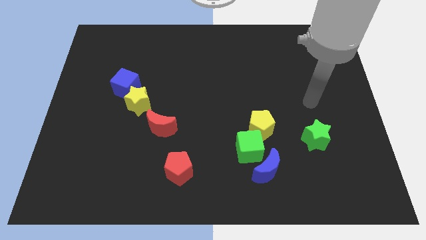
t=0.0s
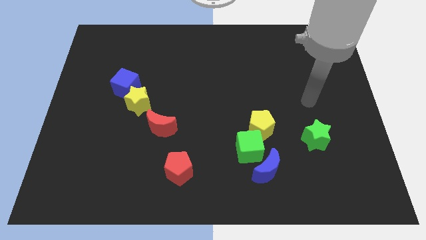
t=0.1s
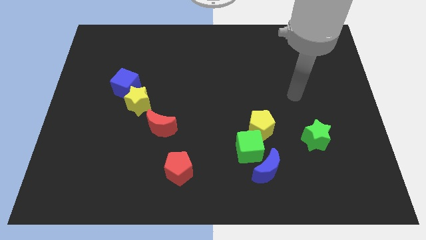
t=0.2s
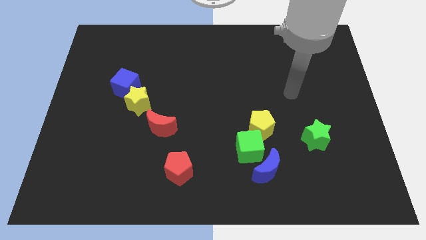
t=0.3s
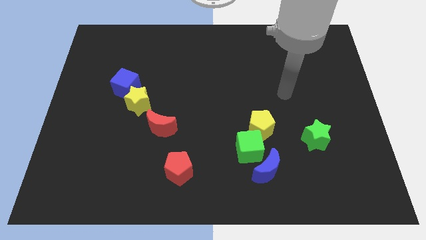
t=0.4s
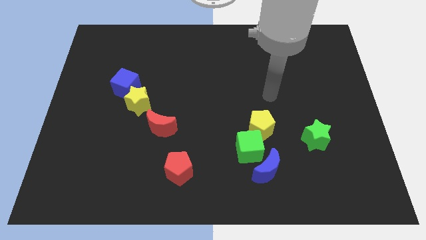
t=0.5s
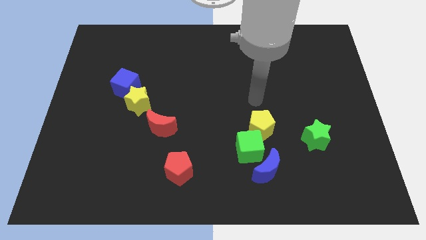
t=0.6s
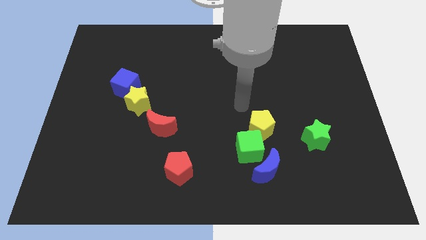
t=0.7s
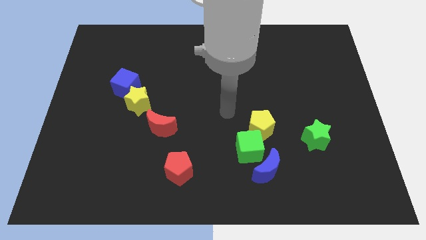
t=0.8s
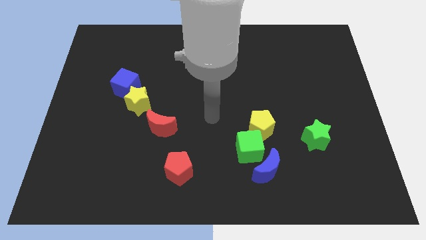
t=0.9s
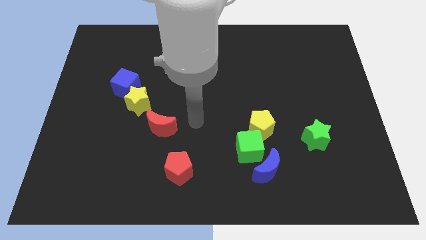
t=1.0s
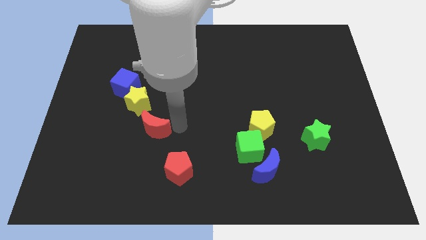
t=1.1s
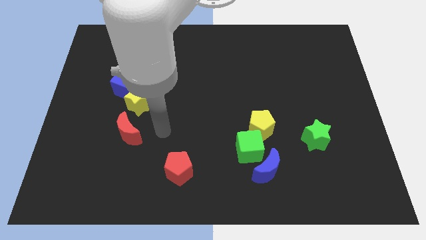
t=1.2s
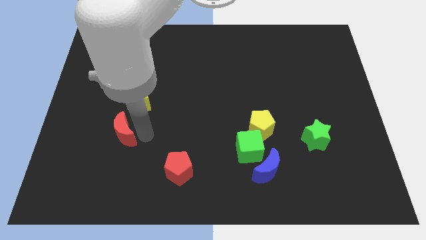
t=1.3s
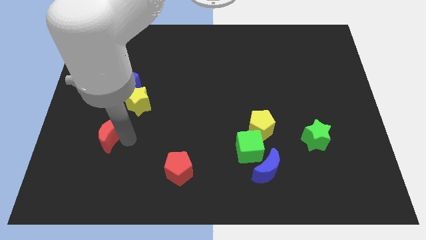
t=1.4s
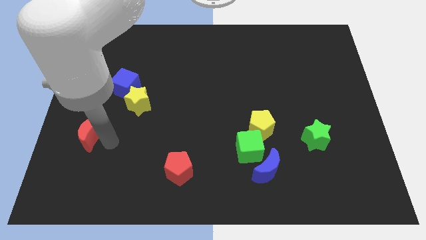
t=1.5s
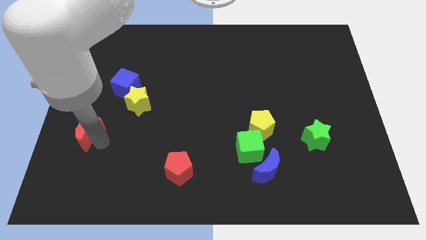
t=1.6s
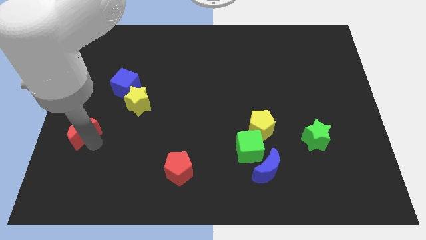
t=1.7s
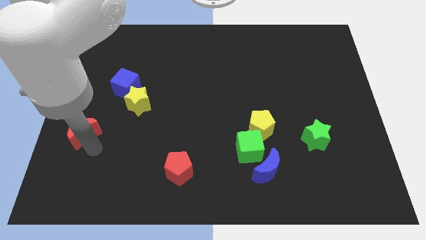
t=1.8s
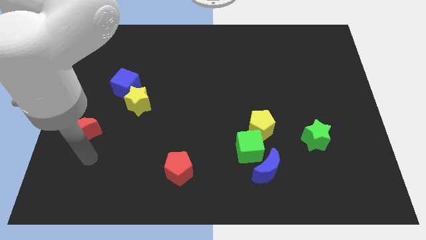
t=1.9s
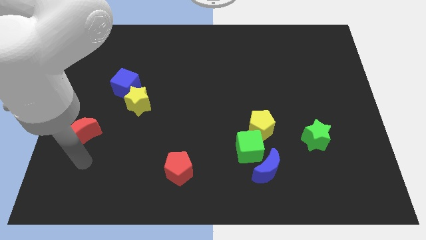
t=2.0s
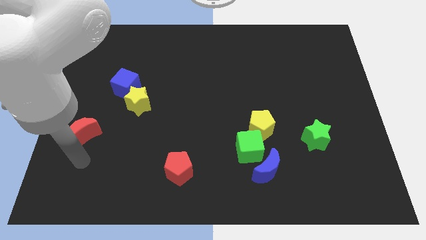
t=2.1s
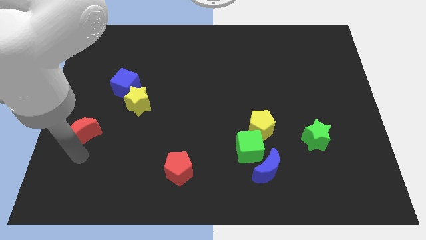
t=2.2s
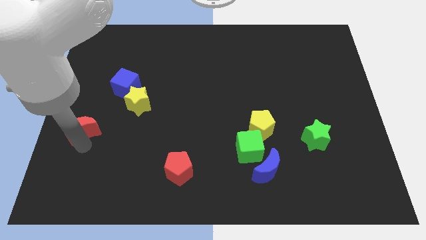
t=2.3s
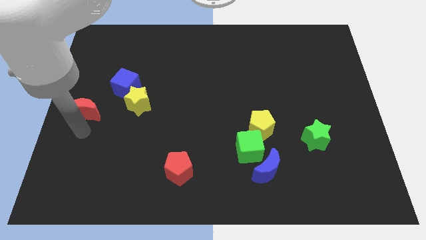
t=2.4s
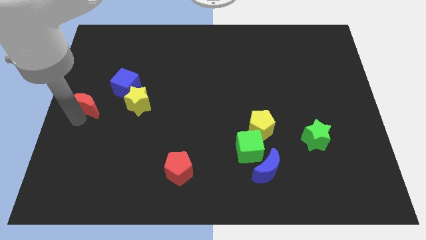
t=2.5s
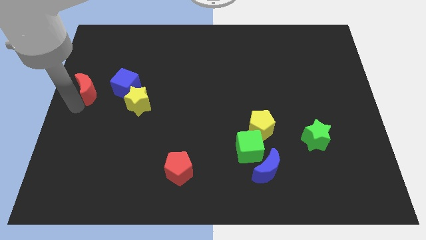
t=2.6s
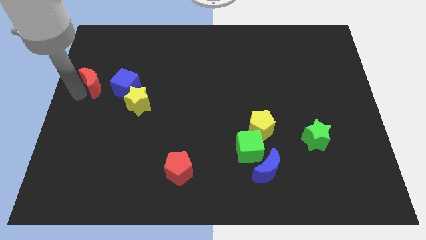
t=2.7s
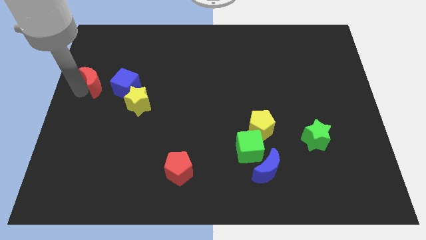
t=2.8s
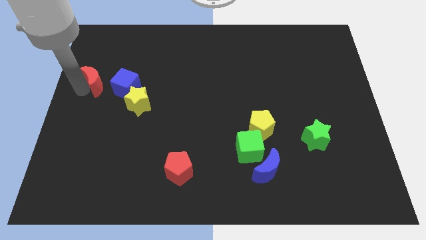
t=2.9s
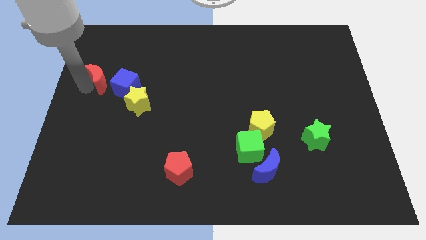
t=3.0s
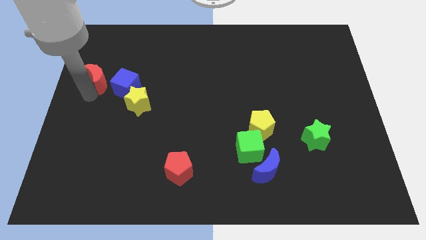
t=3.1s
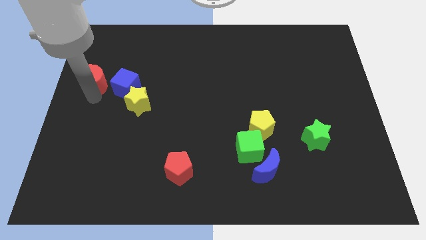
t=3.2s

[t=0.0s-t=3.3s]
push the red moon to the left side of the blue cube

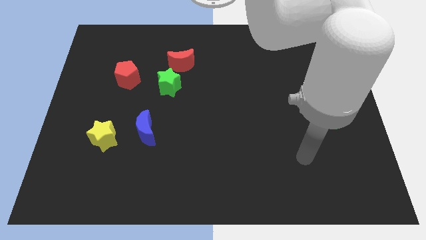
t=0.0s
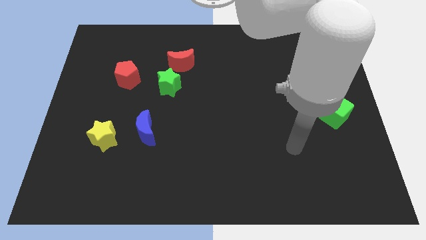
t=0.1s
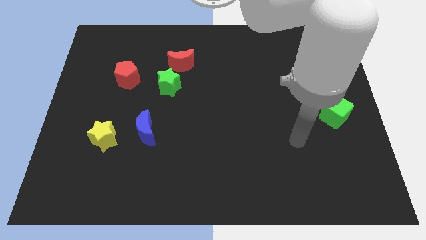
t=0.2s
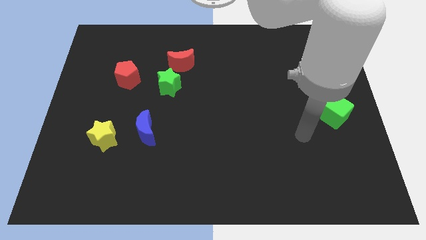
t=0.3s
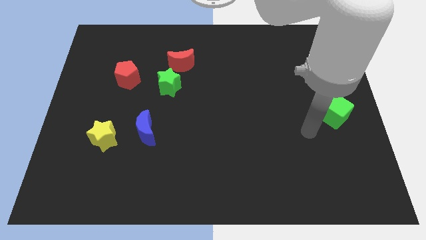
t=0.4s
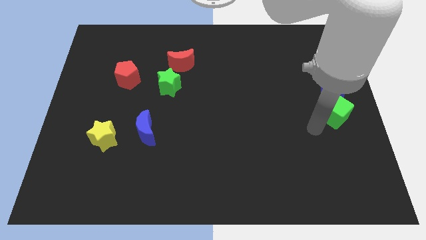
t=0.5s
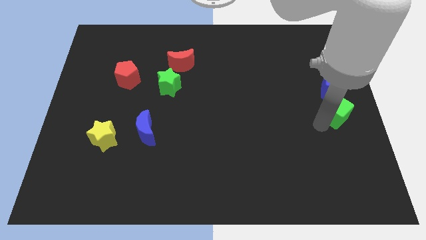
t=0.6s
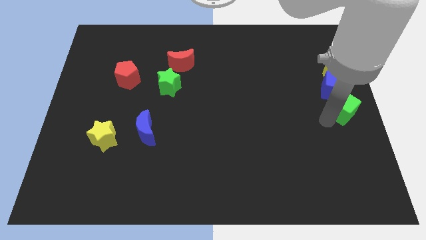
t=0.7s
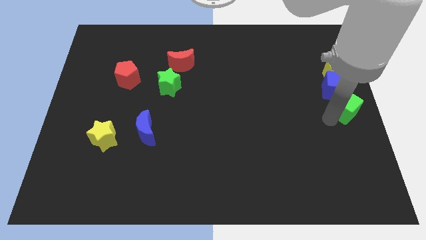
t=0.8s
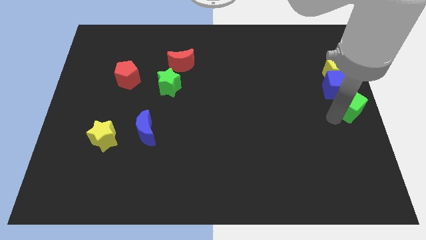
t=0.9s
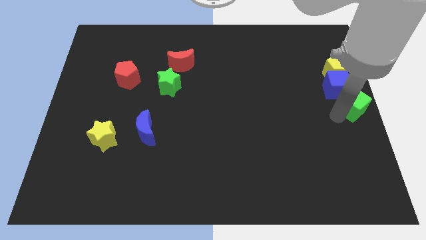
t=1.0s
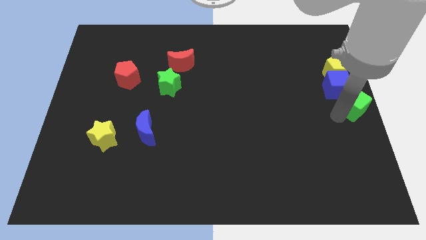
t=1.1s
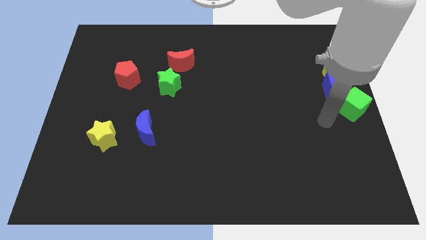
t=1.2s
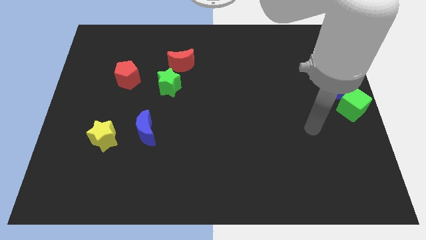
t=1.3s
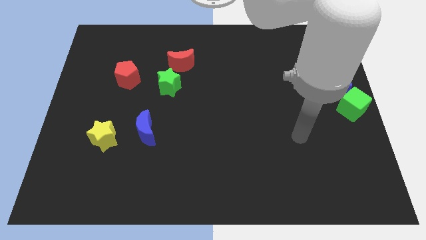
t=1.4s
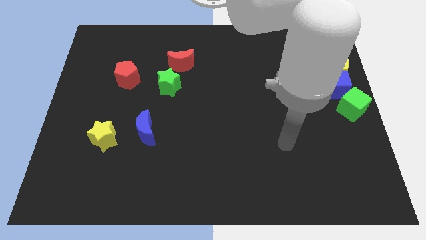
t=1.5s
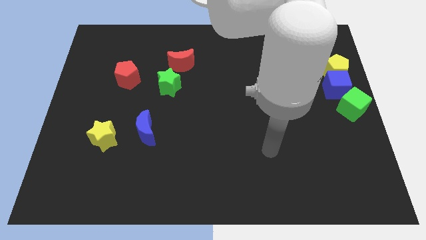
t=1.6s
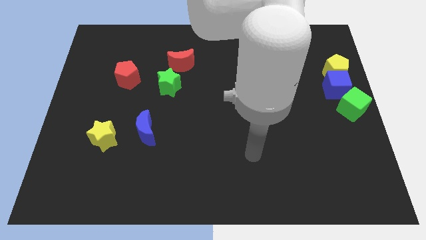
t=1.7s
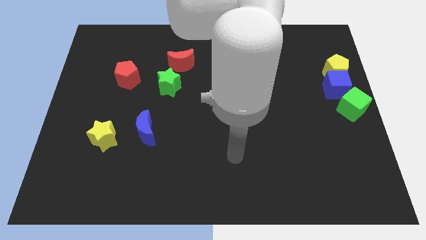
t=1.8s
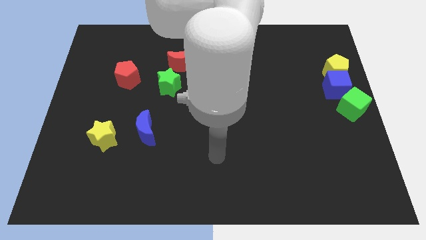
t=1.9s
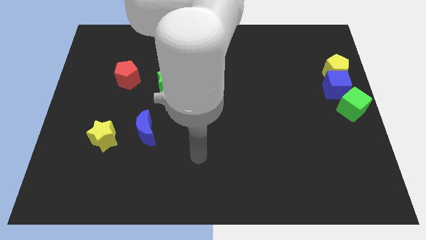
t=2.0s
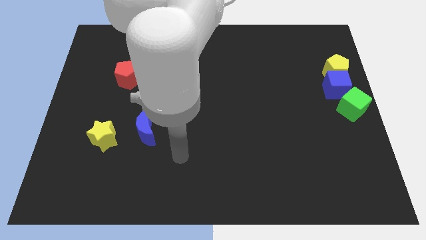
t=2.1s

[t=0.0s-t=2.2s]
move green cube to the center right

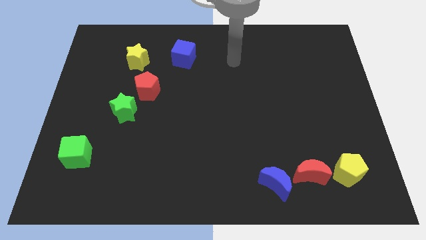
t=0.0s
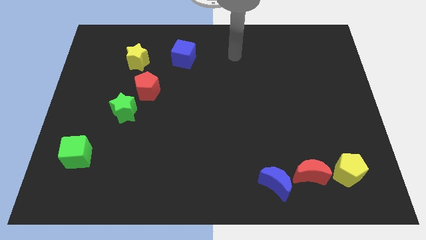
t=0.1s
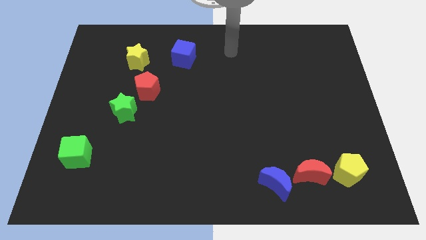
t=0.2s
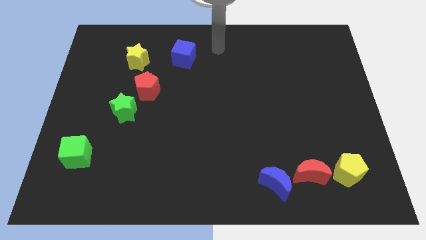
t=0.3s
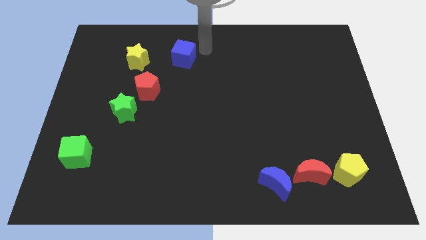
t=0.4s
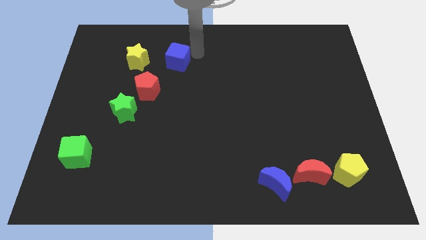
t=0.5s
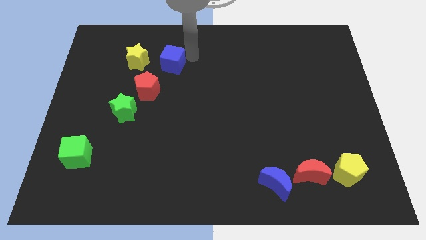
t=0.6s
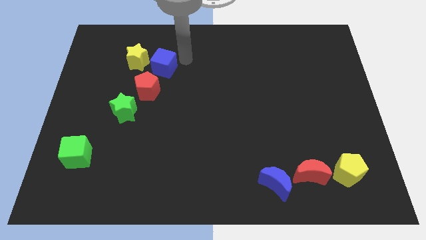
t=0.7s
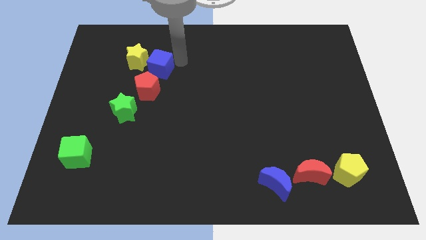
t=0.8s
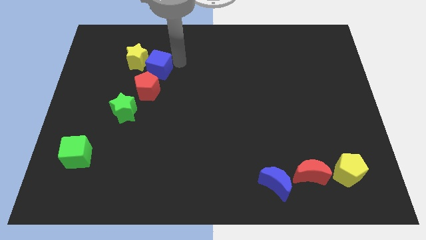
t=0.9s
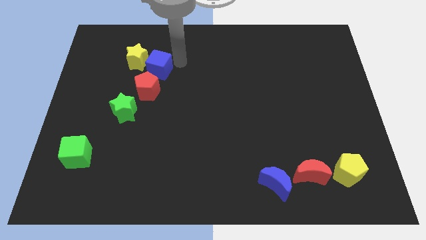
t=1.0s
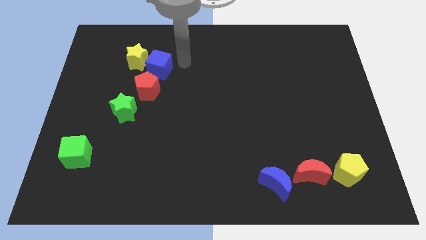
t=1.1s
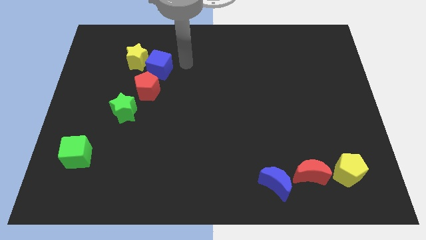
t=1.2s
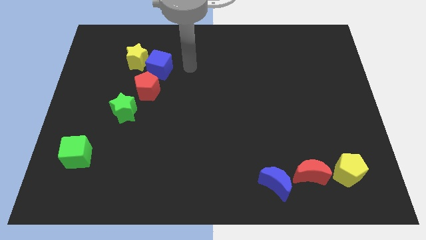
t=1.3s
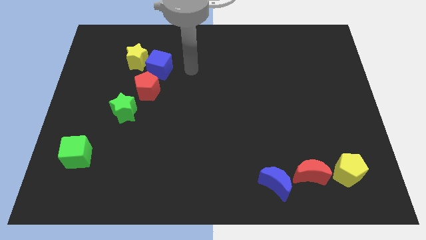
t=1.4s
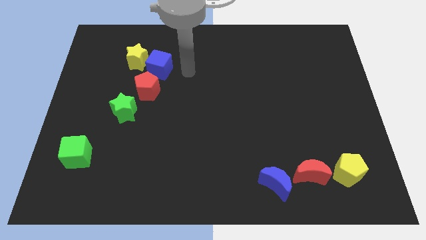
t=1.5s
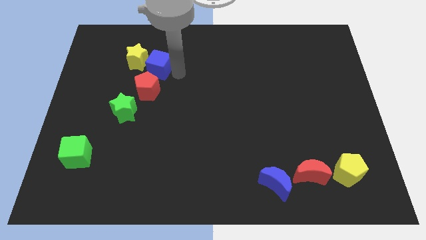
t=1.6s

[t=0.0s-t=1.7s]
push blue cube towards the red pentagon

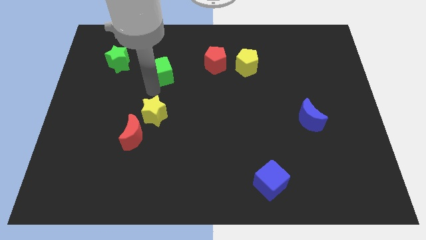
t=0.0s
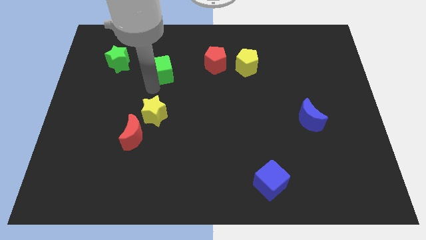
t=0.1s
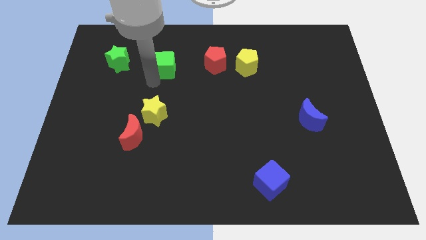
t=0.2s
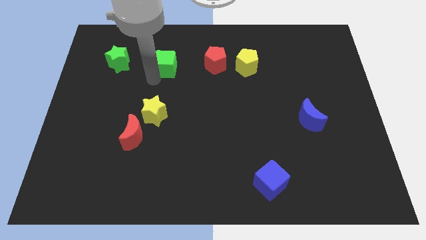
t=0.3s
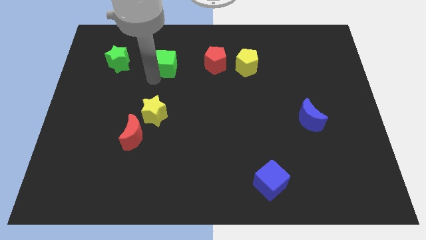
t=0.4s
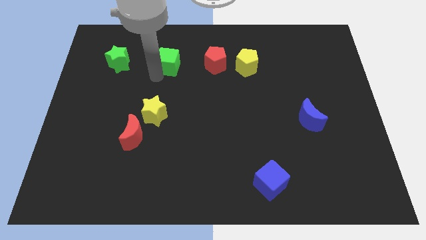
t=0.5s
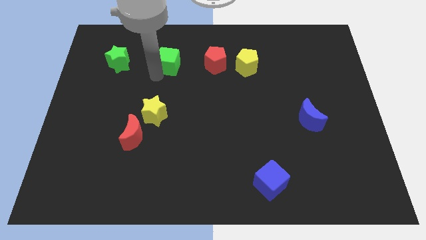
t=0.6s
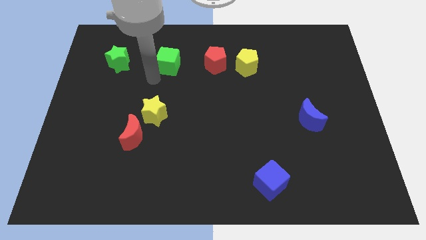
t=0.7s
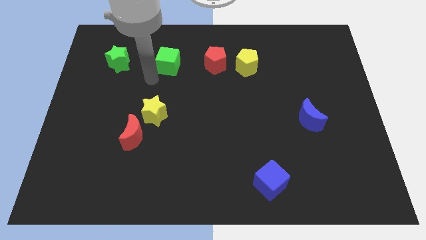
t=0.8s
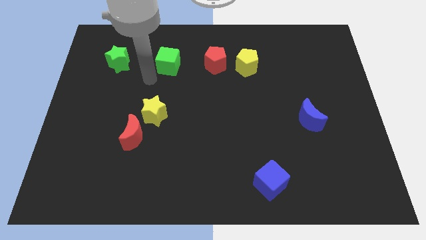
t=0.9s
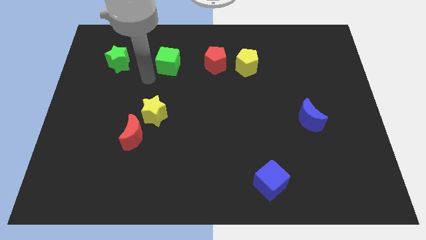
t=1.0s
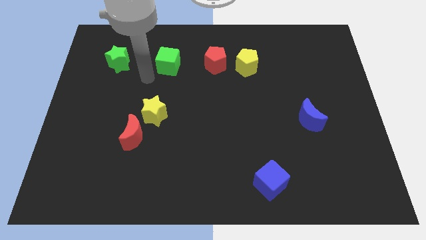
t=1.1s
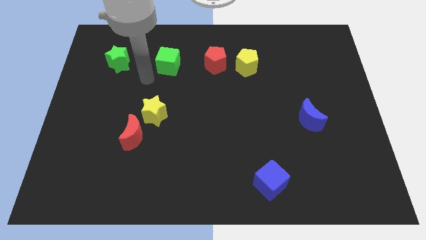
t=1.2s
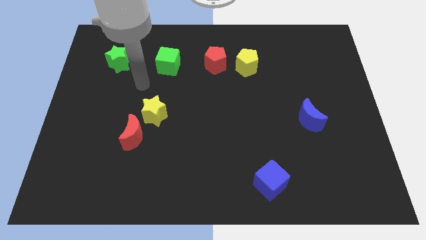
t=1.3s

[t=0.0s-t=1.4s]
place green block left of the red pentagon

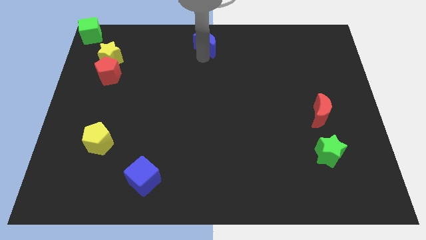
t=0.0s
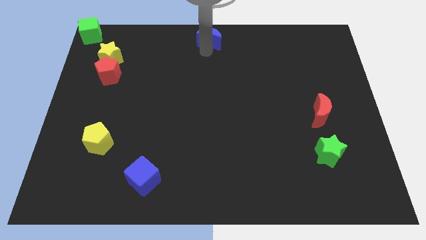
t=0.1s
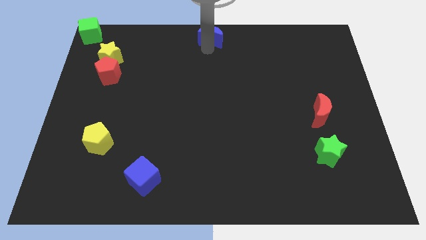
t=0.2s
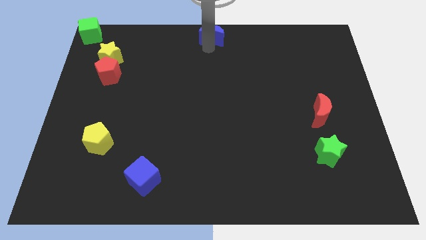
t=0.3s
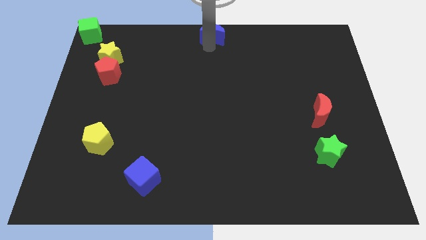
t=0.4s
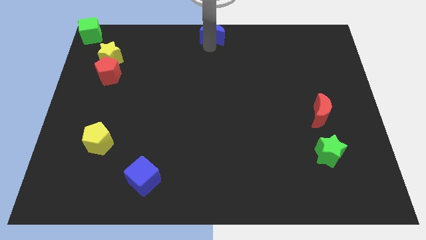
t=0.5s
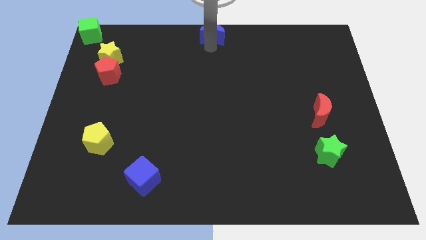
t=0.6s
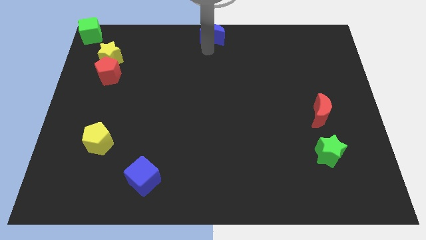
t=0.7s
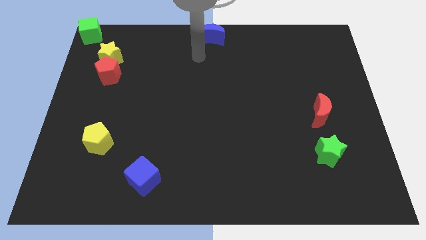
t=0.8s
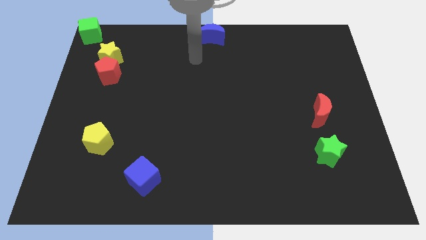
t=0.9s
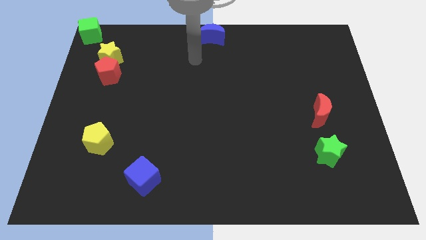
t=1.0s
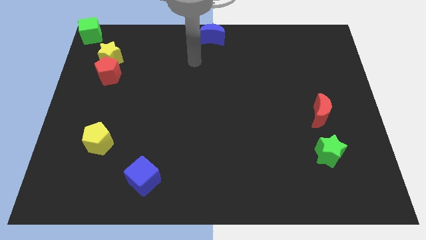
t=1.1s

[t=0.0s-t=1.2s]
push the blue crescent to the top center of board
